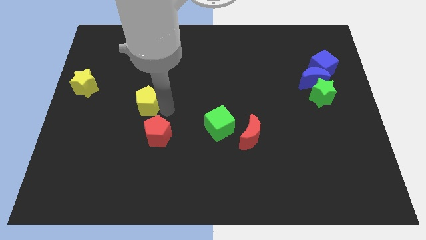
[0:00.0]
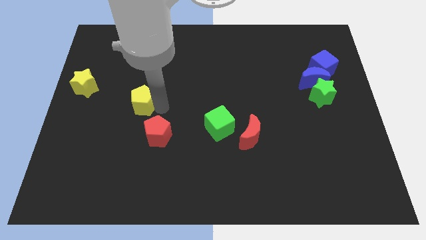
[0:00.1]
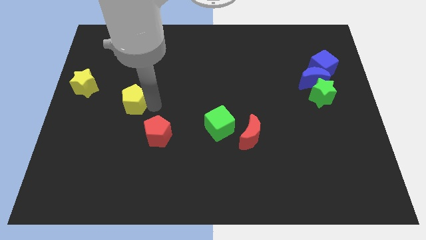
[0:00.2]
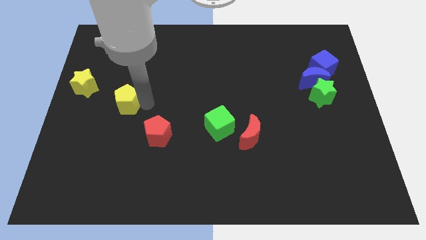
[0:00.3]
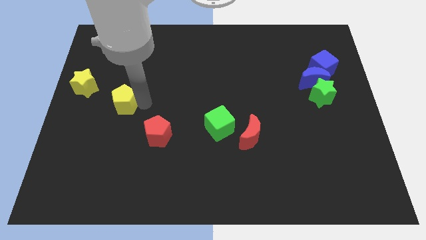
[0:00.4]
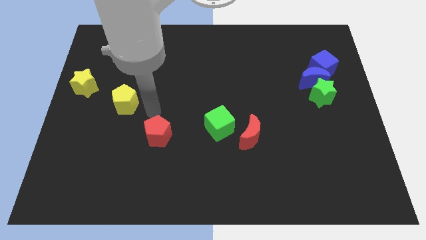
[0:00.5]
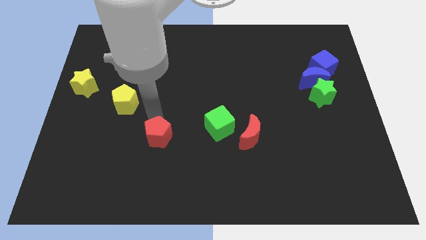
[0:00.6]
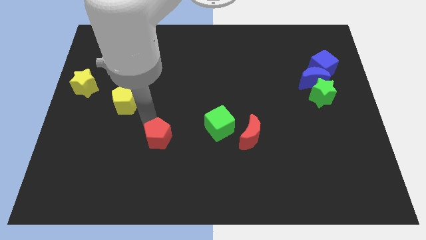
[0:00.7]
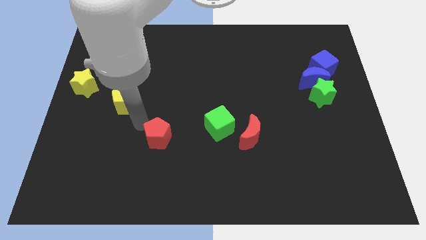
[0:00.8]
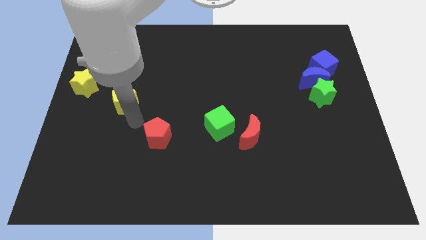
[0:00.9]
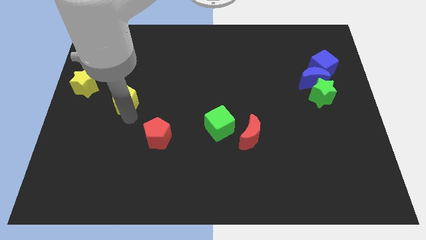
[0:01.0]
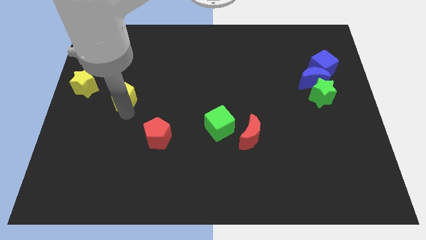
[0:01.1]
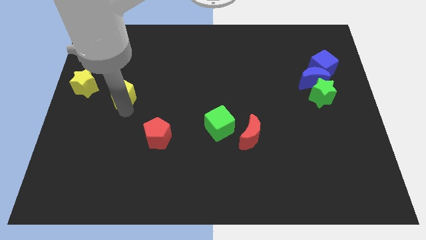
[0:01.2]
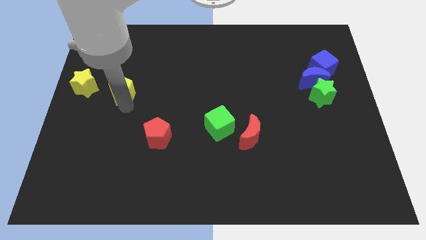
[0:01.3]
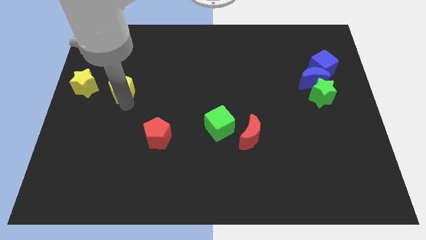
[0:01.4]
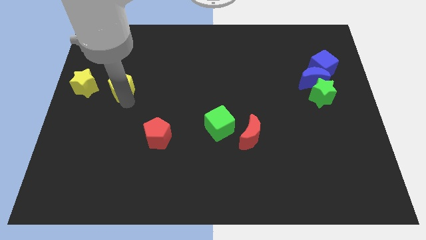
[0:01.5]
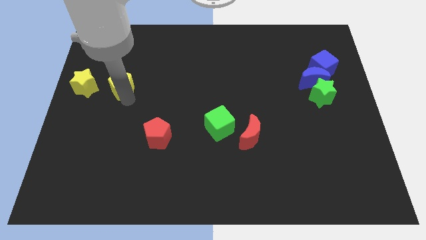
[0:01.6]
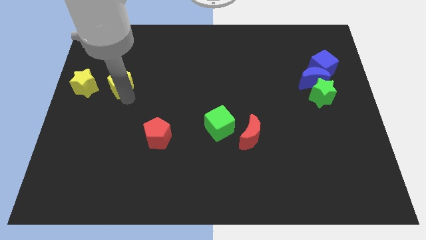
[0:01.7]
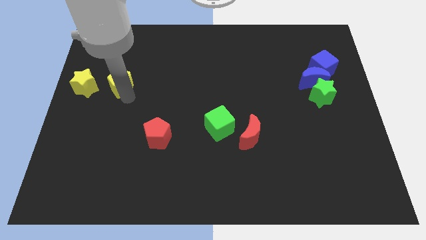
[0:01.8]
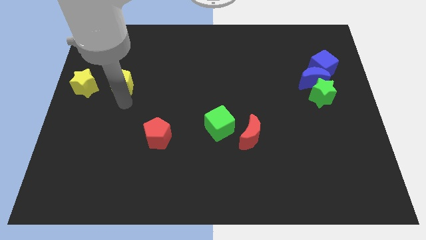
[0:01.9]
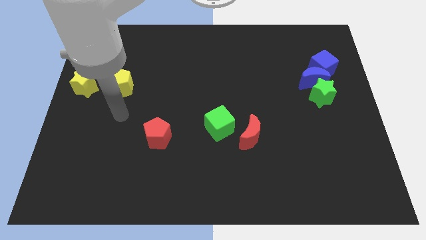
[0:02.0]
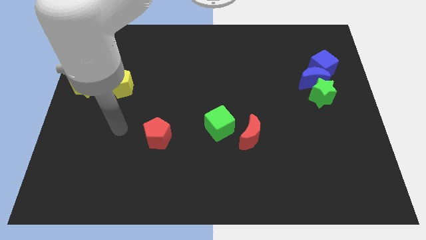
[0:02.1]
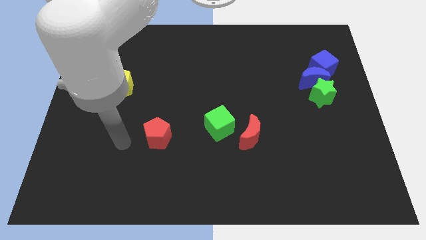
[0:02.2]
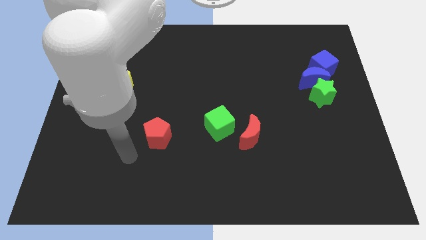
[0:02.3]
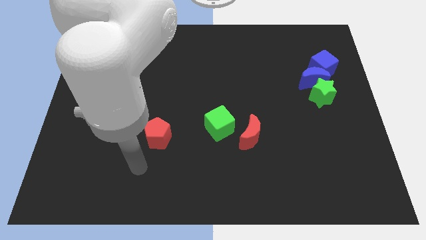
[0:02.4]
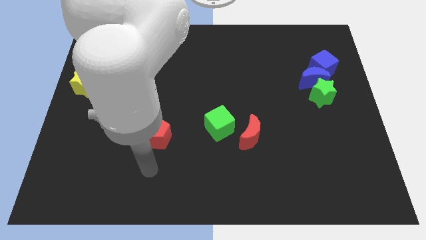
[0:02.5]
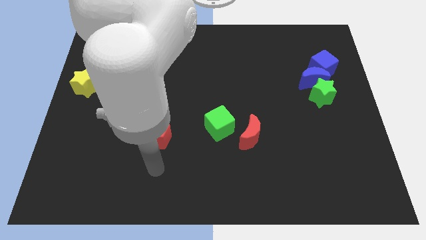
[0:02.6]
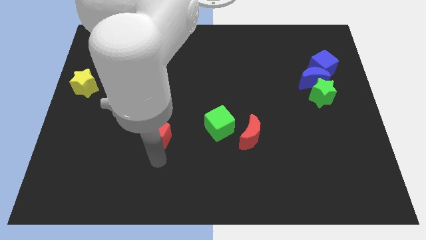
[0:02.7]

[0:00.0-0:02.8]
drag red pentagon below yellow pentagon

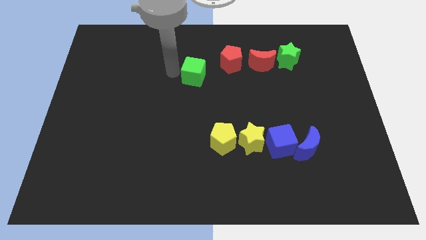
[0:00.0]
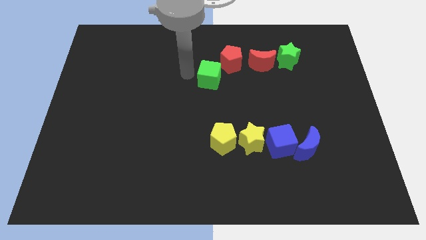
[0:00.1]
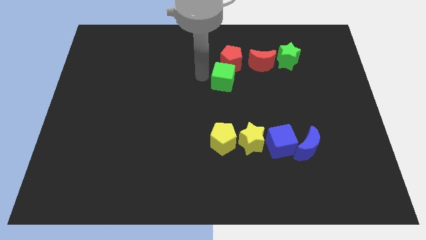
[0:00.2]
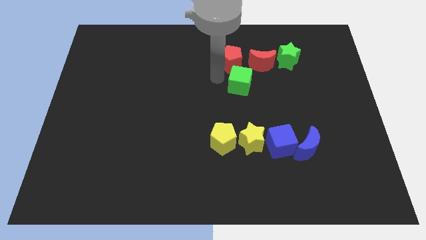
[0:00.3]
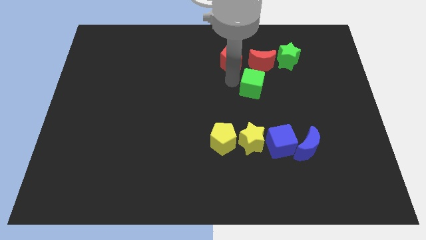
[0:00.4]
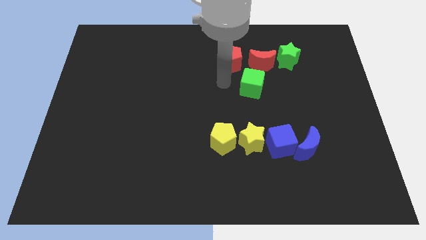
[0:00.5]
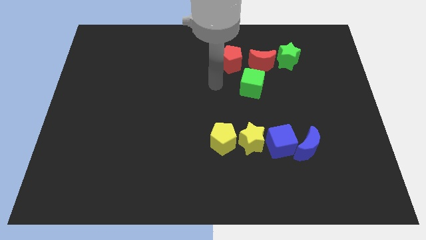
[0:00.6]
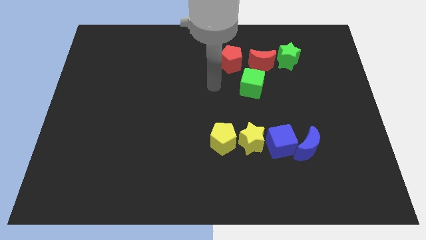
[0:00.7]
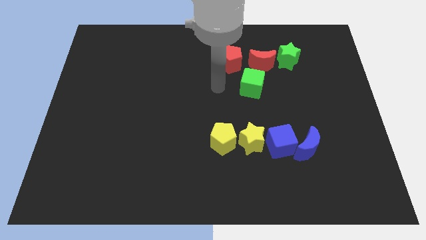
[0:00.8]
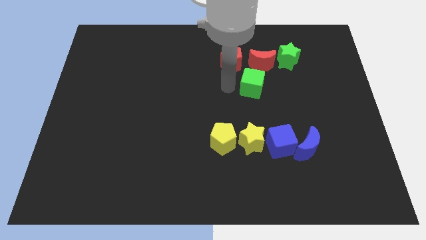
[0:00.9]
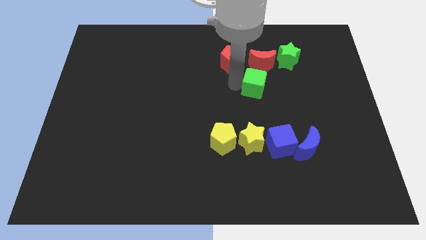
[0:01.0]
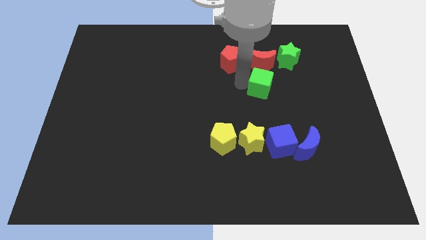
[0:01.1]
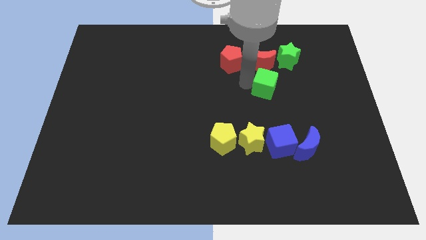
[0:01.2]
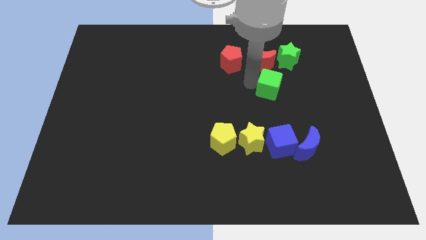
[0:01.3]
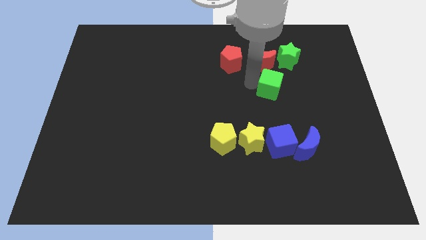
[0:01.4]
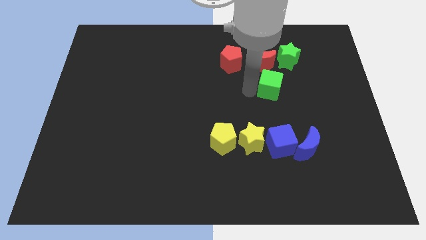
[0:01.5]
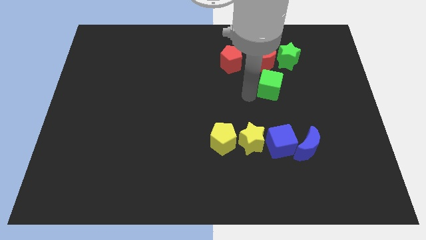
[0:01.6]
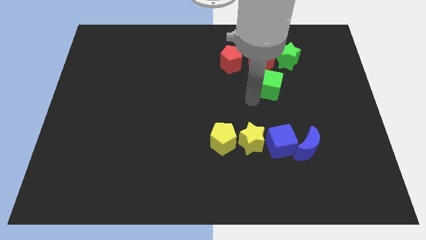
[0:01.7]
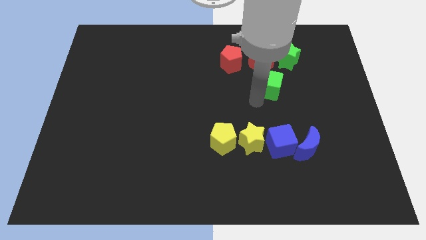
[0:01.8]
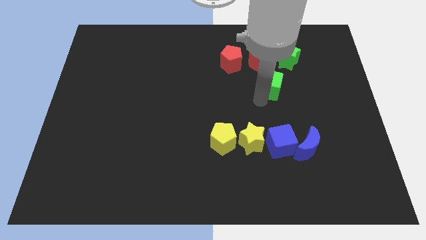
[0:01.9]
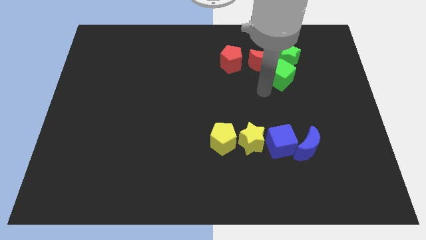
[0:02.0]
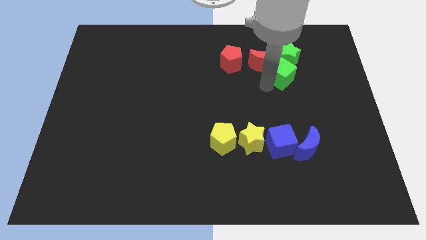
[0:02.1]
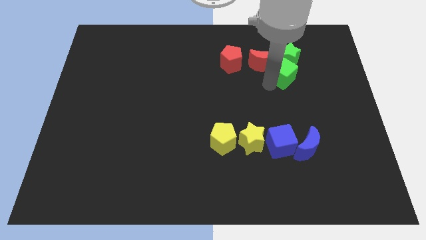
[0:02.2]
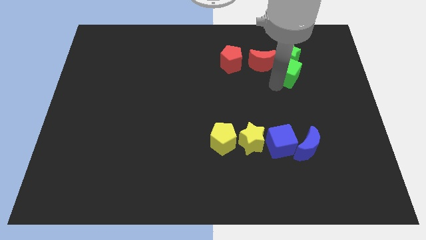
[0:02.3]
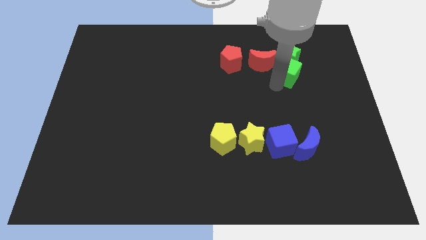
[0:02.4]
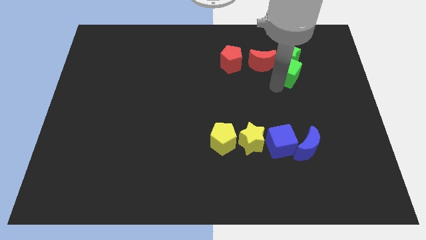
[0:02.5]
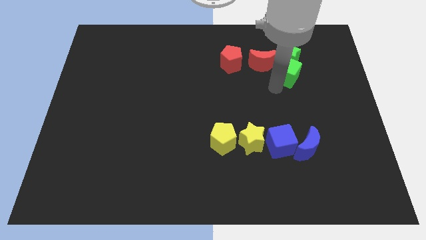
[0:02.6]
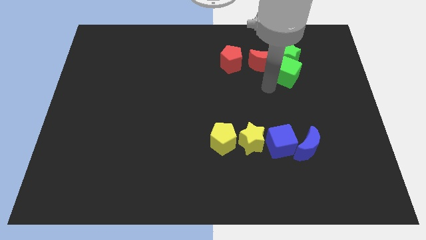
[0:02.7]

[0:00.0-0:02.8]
move the green cube to the bottom of the green star

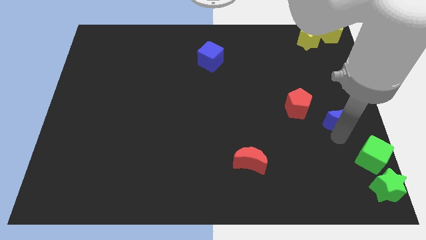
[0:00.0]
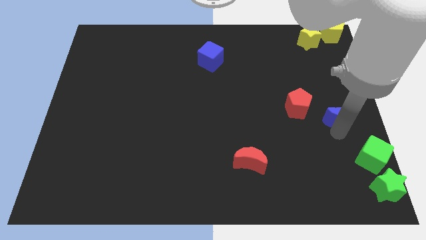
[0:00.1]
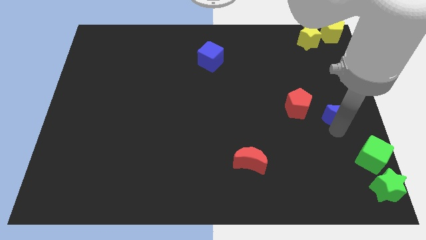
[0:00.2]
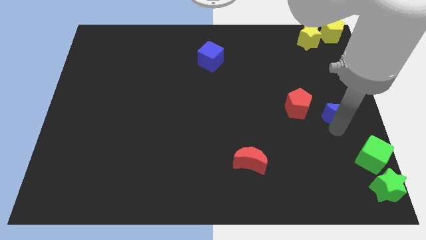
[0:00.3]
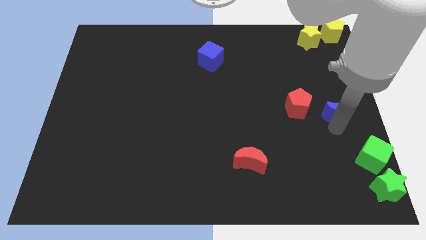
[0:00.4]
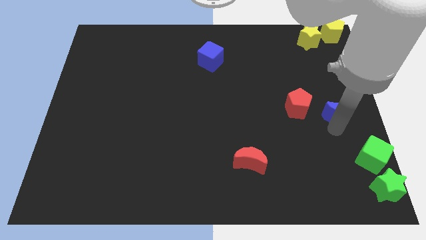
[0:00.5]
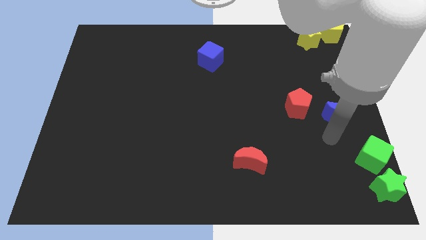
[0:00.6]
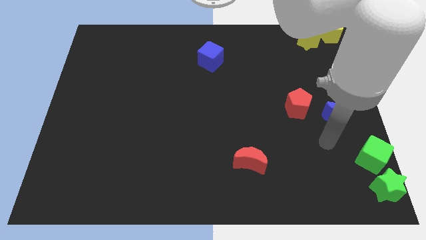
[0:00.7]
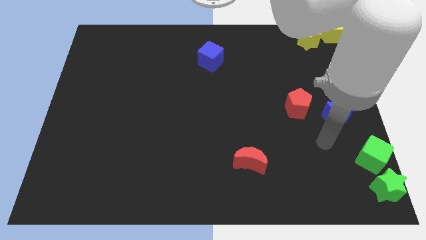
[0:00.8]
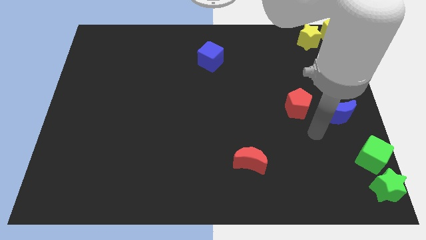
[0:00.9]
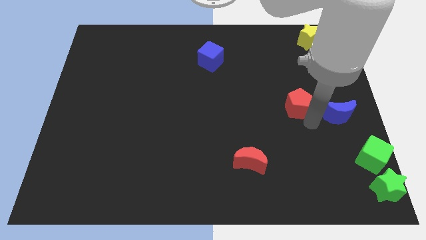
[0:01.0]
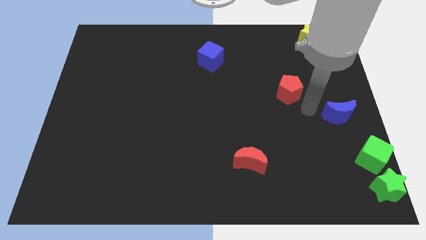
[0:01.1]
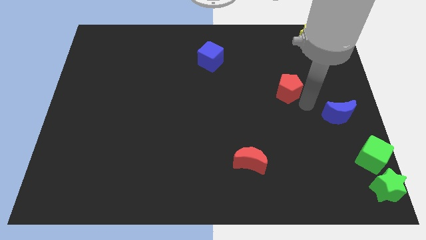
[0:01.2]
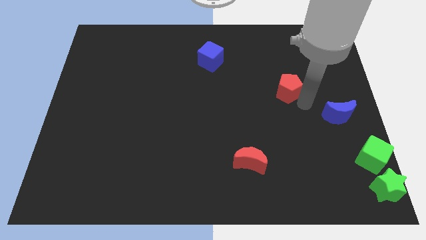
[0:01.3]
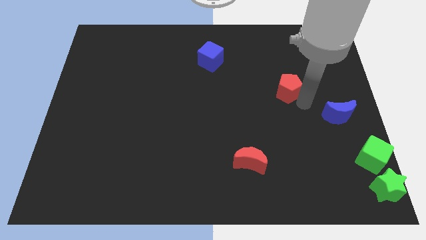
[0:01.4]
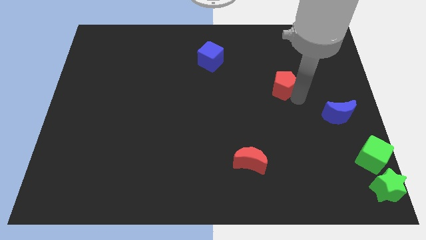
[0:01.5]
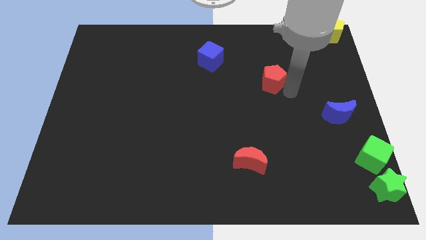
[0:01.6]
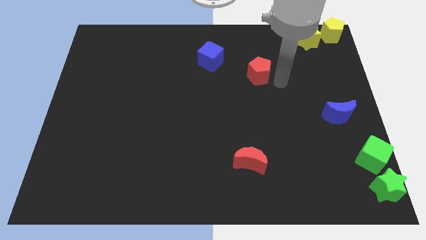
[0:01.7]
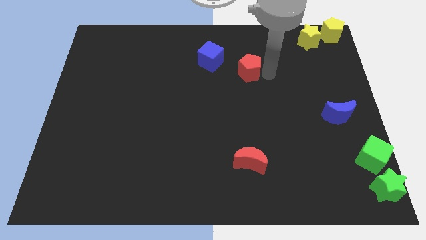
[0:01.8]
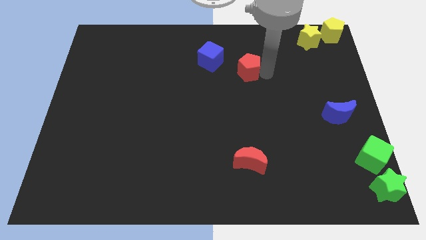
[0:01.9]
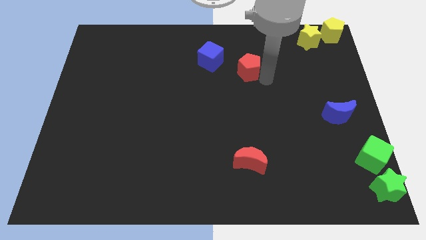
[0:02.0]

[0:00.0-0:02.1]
slide the red pentagon towards the bottom right of the blue cube

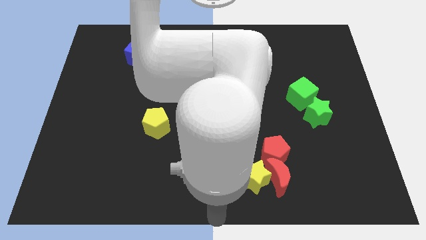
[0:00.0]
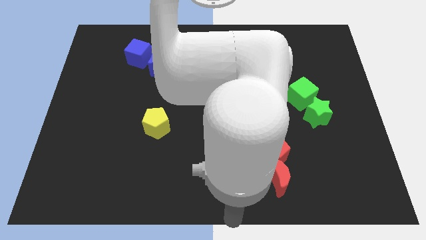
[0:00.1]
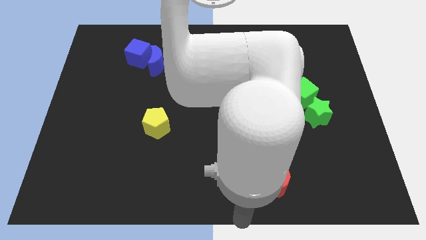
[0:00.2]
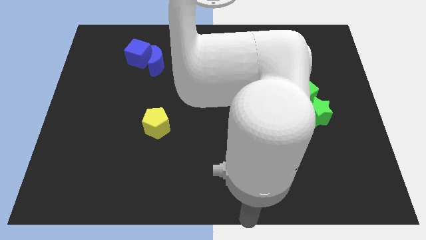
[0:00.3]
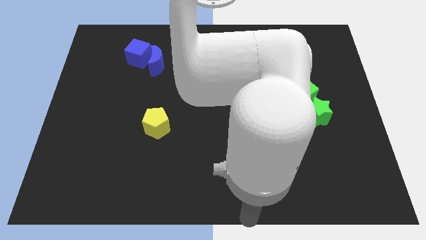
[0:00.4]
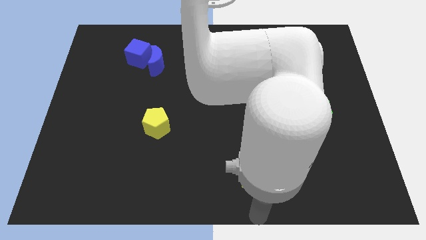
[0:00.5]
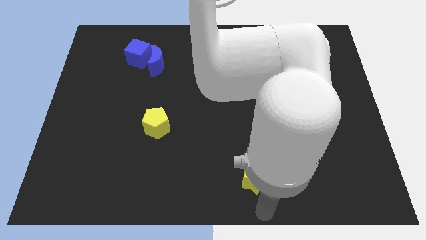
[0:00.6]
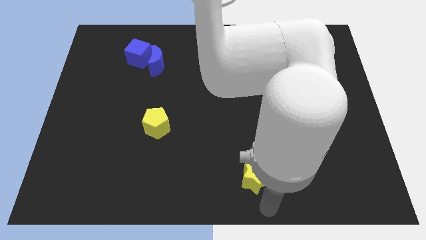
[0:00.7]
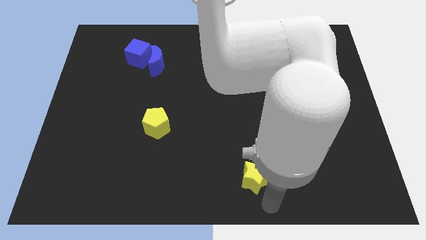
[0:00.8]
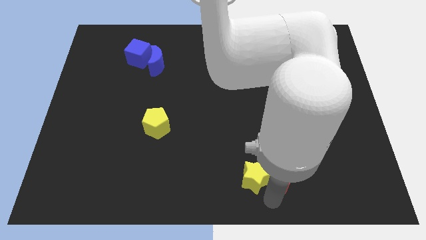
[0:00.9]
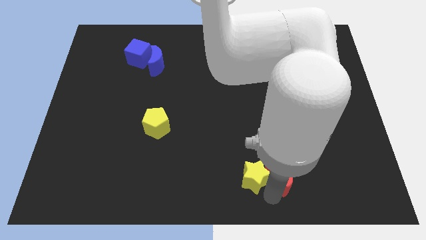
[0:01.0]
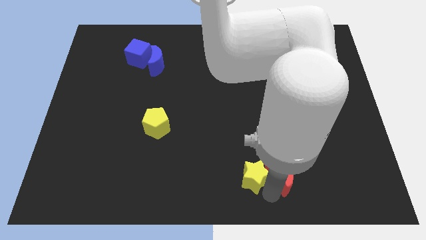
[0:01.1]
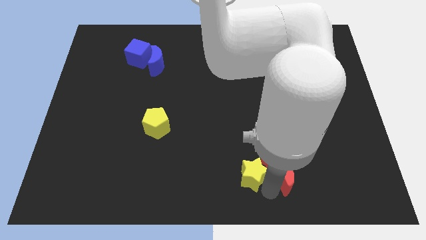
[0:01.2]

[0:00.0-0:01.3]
touch the bottom of yellow star
